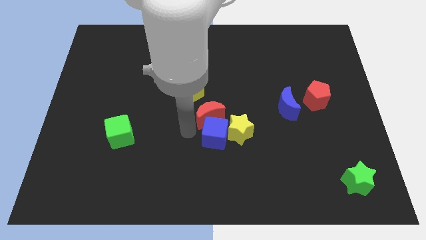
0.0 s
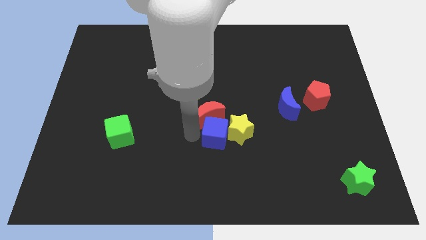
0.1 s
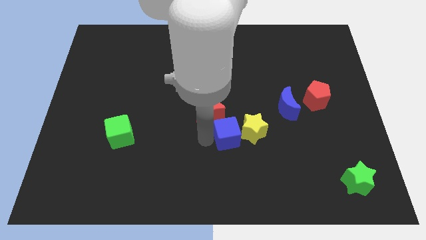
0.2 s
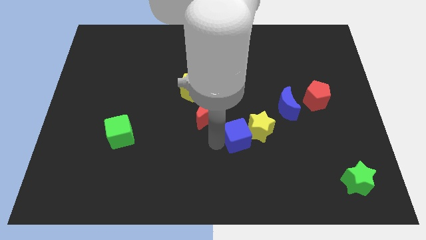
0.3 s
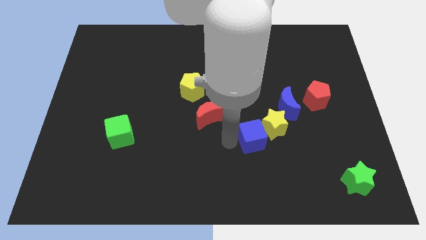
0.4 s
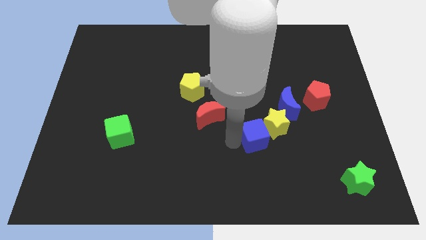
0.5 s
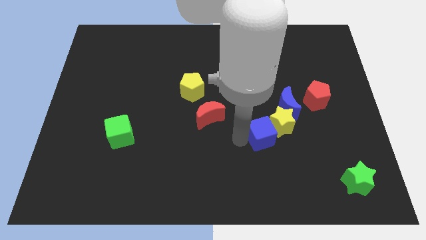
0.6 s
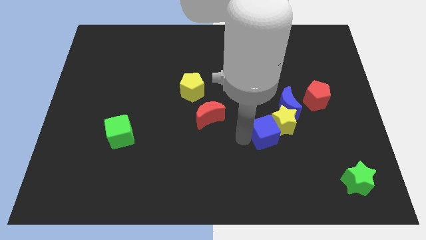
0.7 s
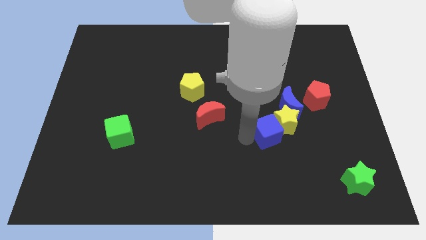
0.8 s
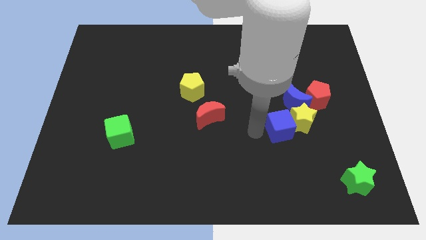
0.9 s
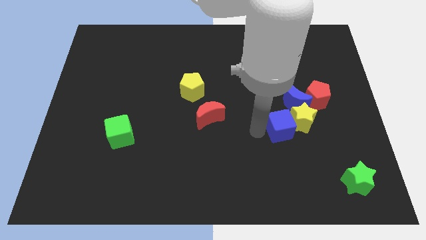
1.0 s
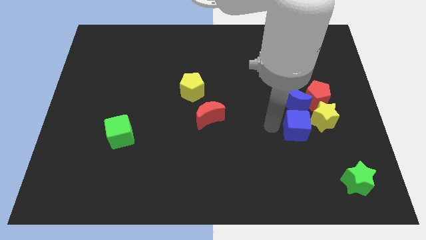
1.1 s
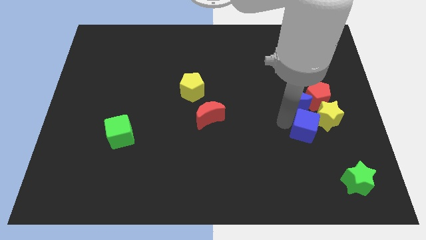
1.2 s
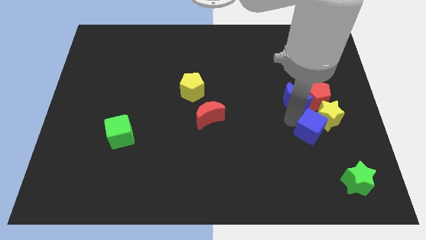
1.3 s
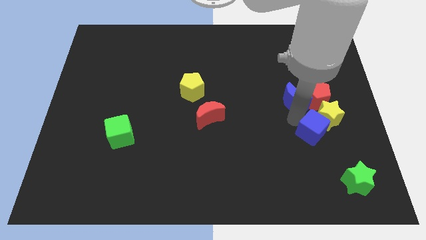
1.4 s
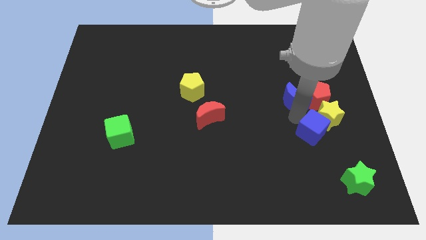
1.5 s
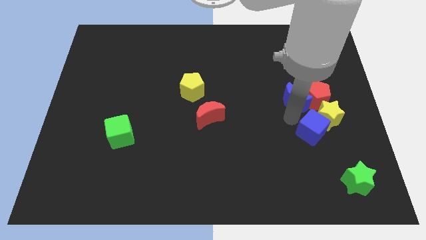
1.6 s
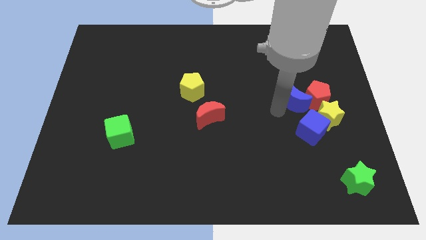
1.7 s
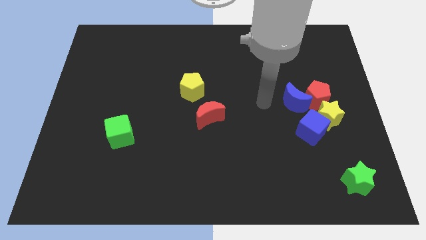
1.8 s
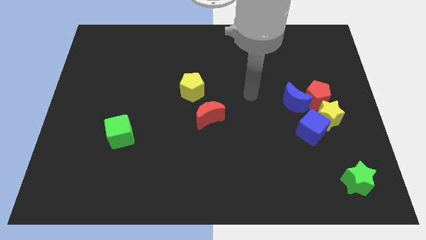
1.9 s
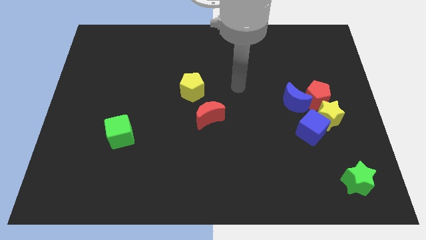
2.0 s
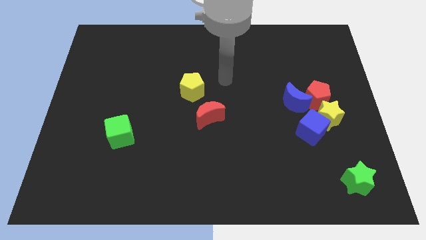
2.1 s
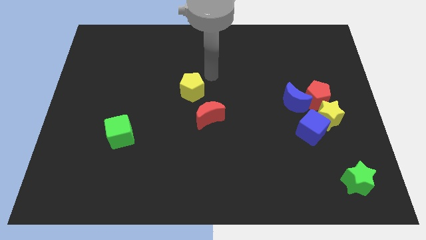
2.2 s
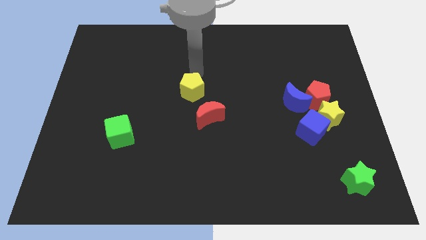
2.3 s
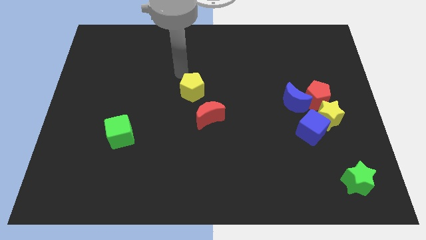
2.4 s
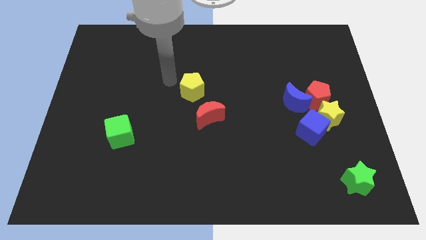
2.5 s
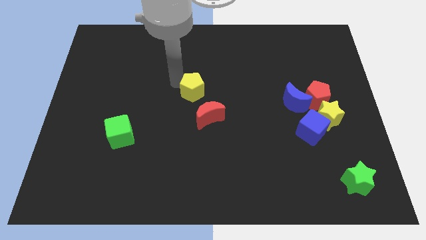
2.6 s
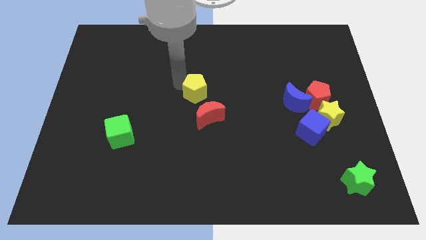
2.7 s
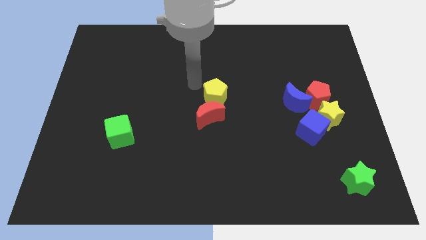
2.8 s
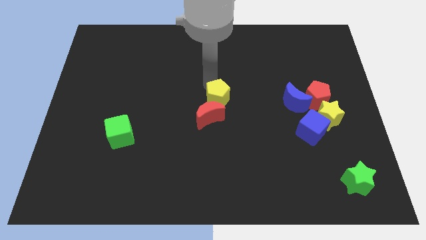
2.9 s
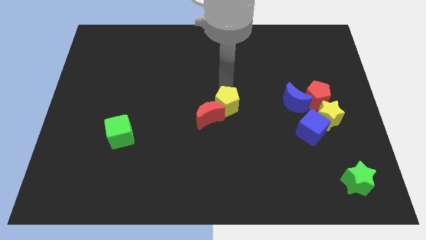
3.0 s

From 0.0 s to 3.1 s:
move the blue cube and yellow star away from the red crescent

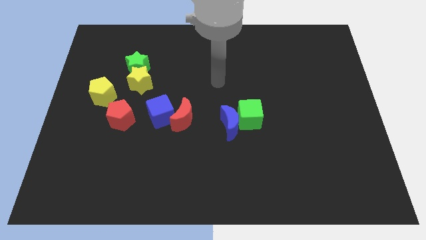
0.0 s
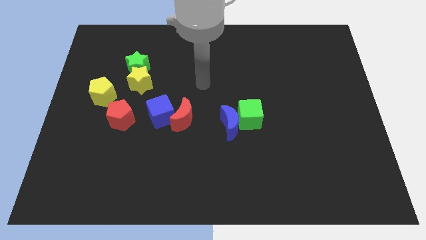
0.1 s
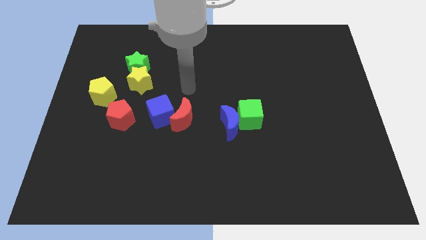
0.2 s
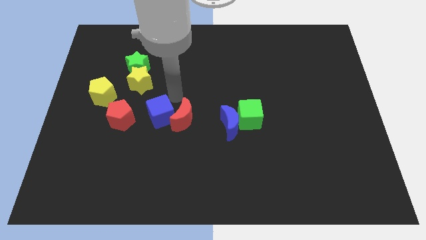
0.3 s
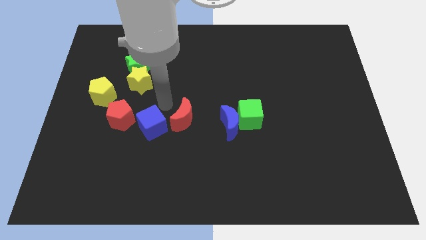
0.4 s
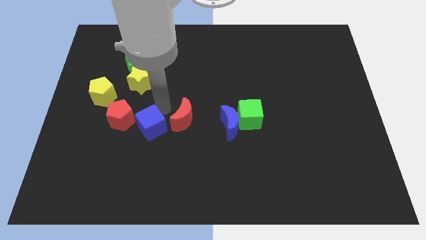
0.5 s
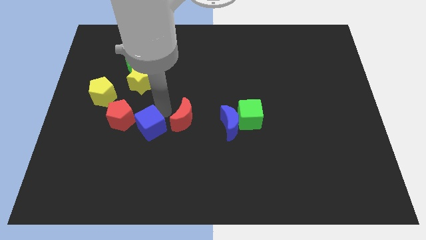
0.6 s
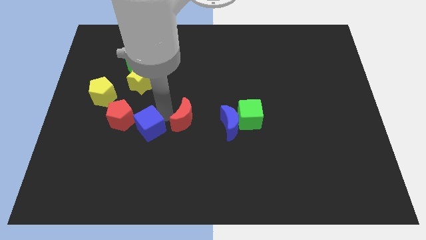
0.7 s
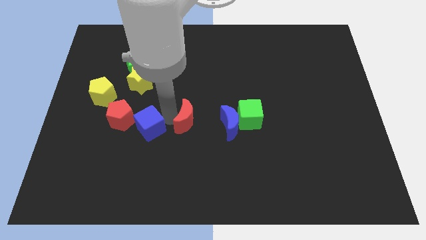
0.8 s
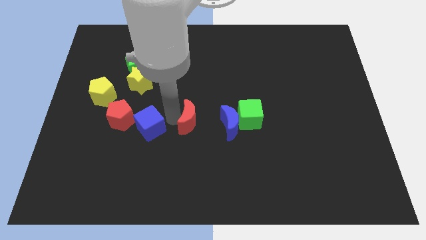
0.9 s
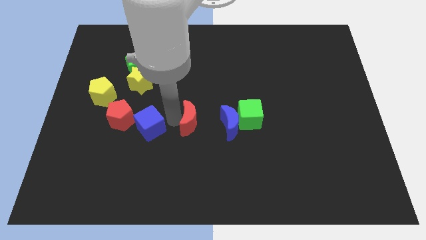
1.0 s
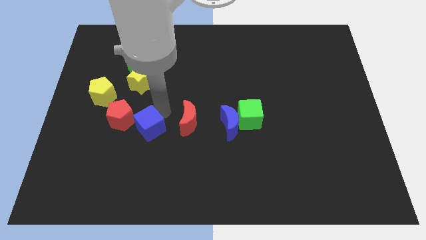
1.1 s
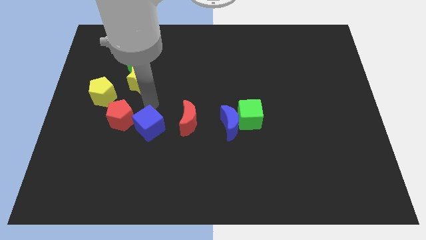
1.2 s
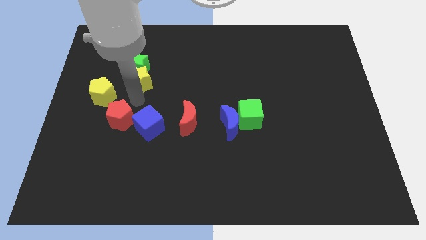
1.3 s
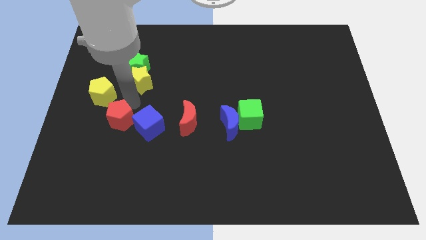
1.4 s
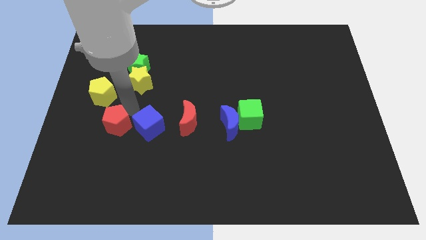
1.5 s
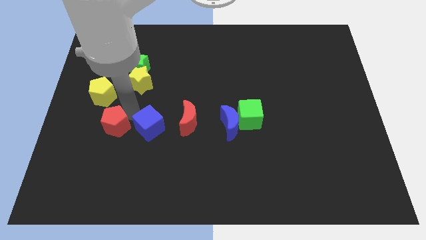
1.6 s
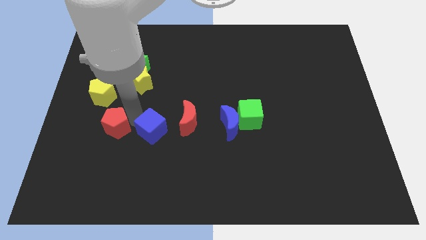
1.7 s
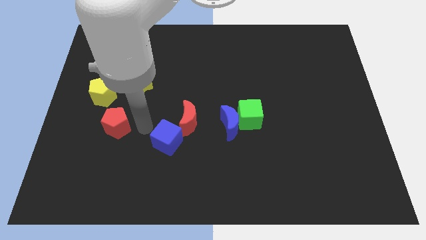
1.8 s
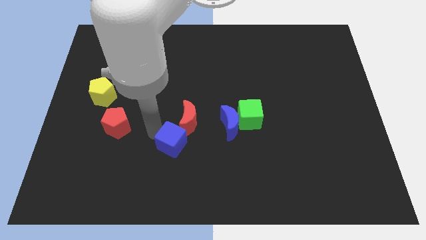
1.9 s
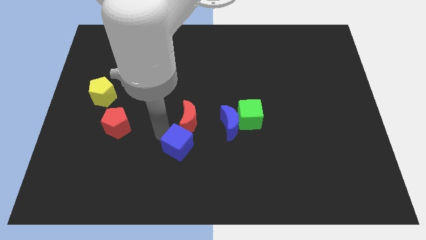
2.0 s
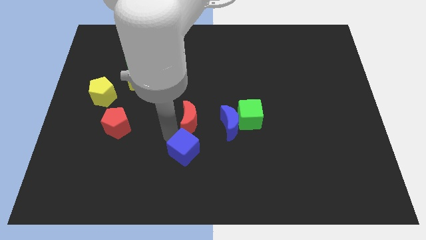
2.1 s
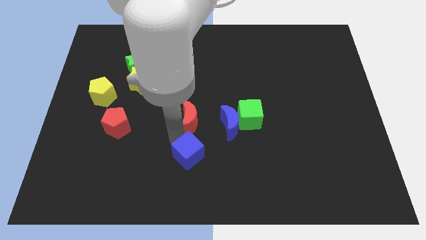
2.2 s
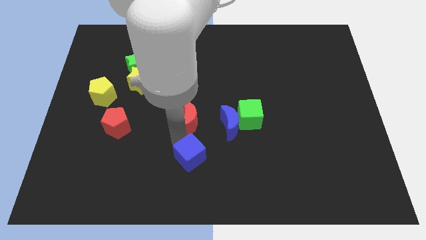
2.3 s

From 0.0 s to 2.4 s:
place the blue cube to the bottom of the red moon

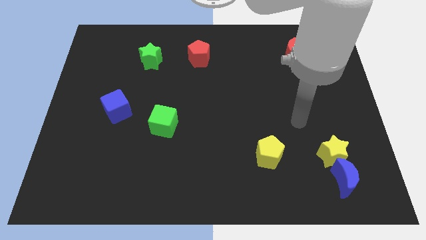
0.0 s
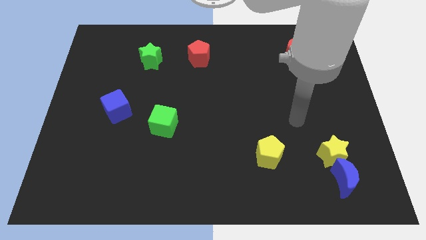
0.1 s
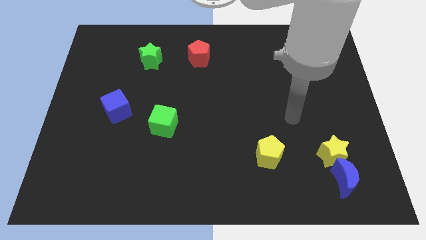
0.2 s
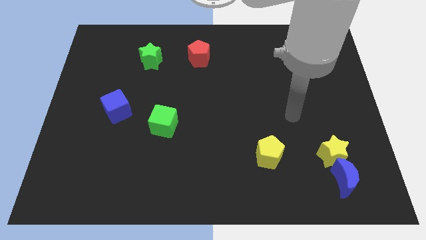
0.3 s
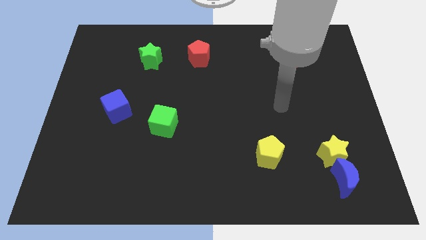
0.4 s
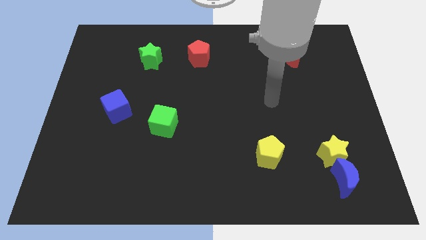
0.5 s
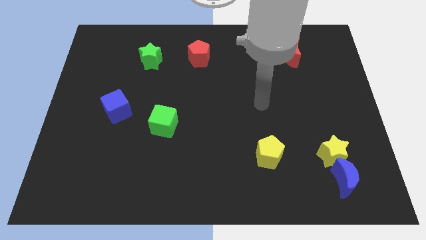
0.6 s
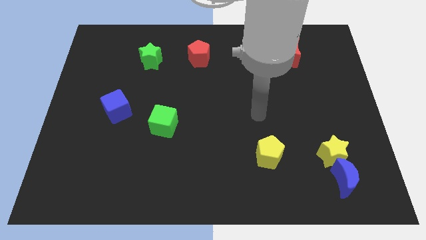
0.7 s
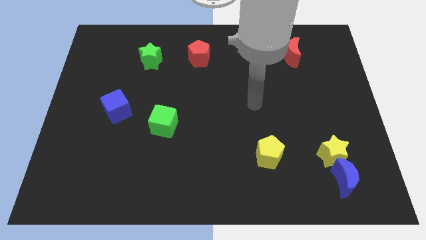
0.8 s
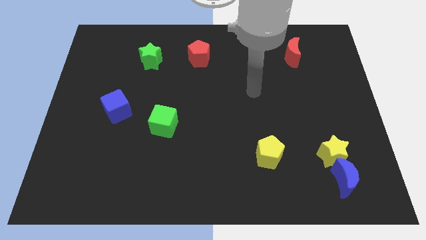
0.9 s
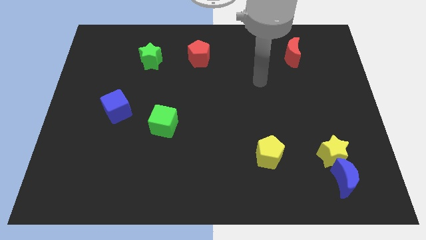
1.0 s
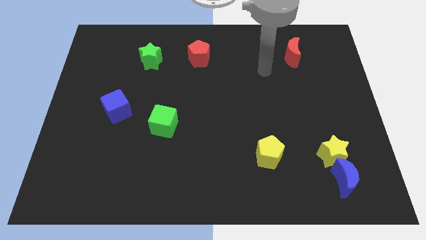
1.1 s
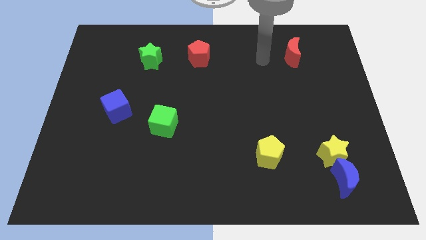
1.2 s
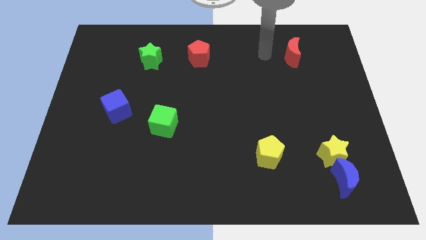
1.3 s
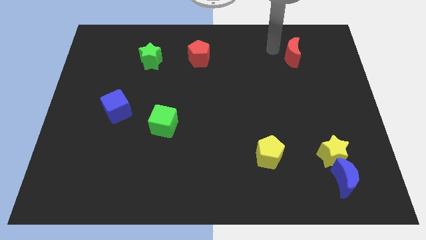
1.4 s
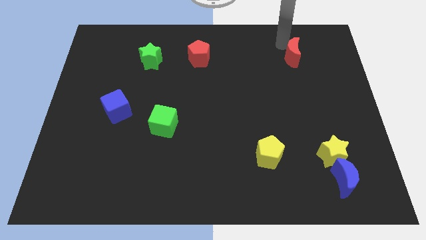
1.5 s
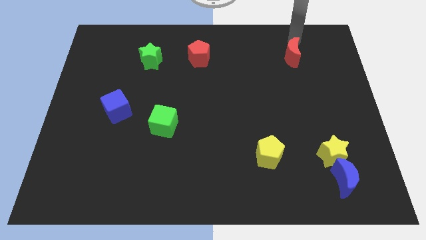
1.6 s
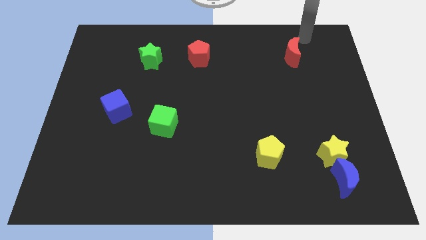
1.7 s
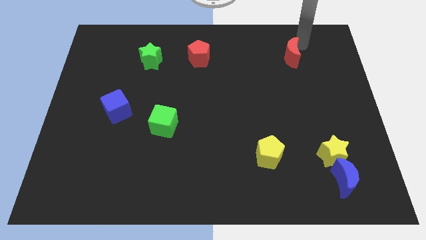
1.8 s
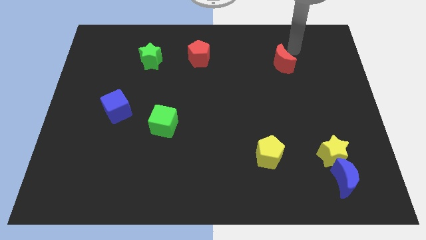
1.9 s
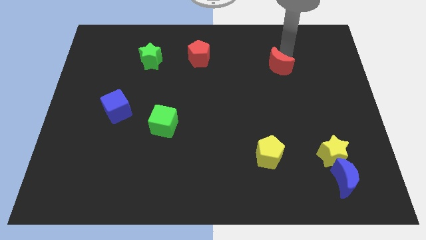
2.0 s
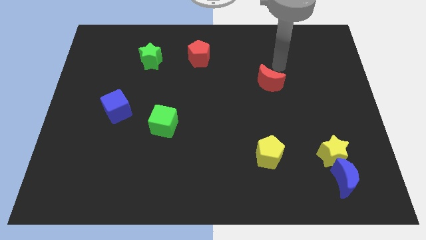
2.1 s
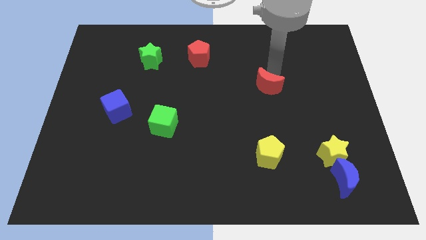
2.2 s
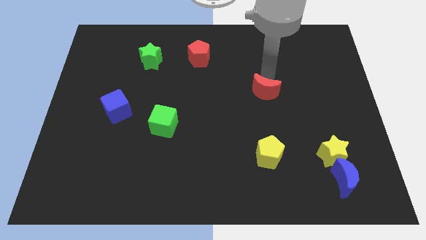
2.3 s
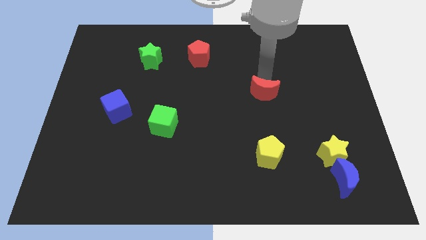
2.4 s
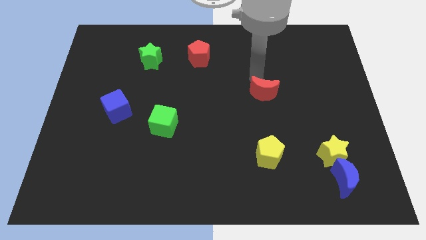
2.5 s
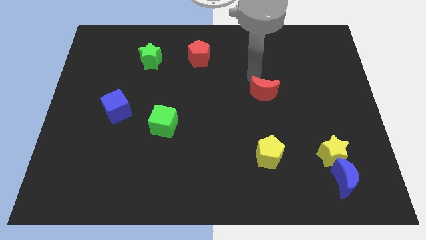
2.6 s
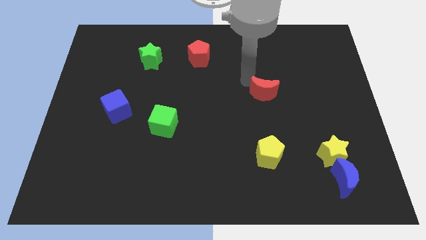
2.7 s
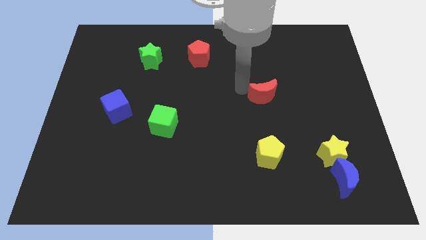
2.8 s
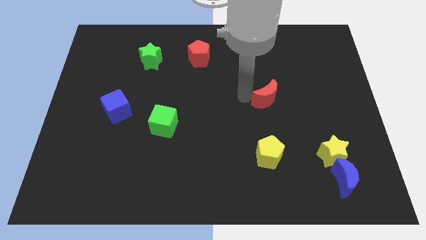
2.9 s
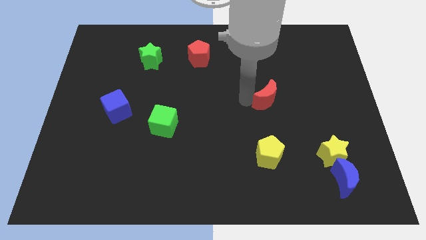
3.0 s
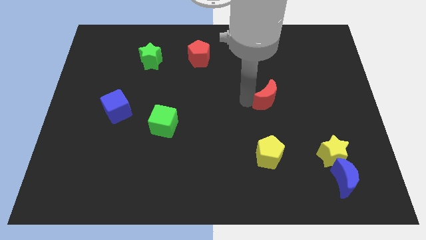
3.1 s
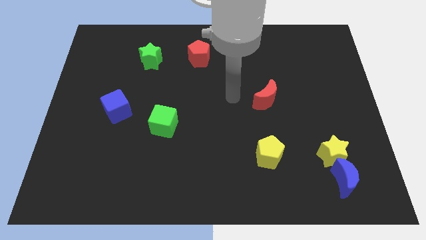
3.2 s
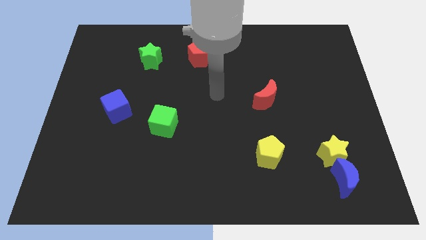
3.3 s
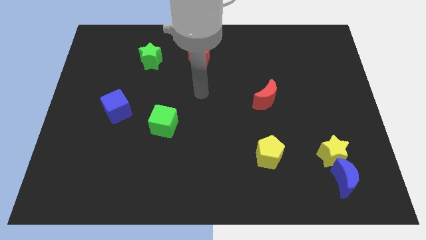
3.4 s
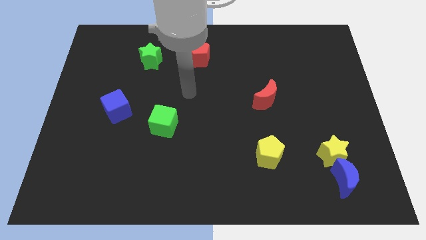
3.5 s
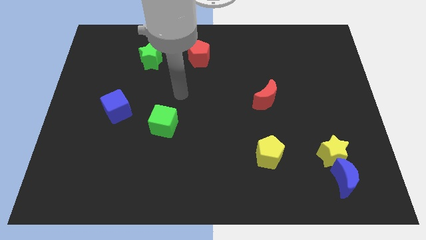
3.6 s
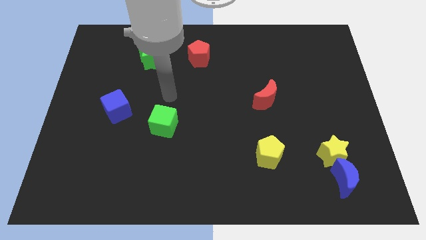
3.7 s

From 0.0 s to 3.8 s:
move the red crescent to the top side of the yellow pentagon
